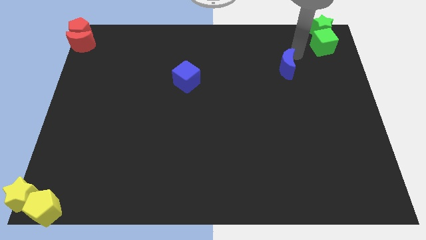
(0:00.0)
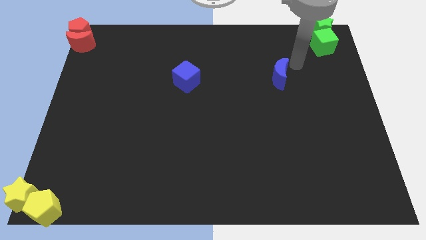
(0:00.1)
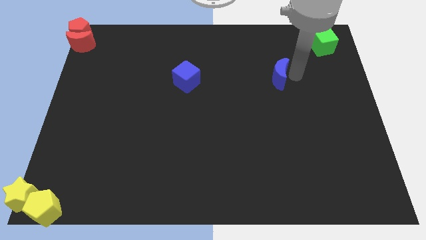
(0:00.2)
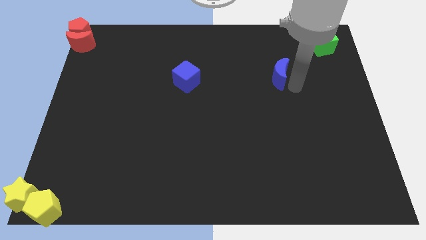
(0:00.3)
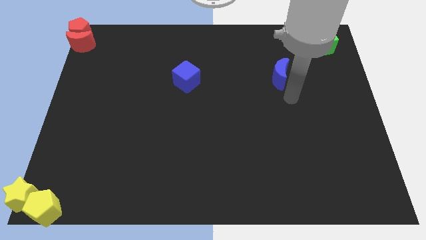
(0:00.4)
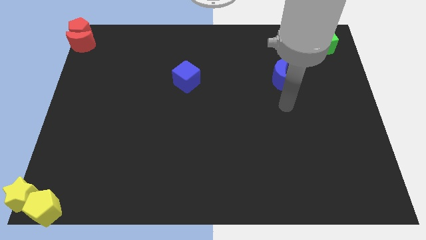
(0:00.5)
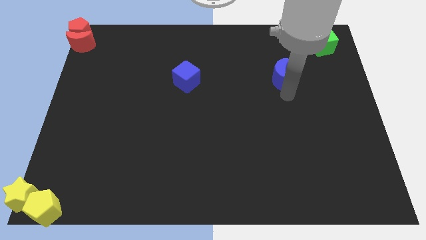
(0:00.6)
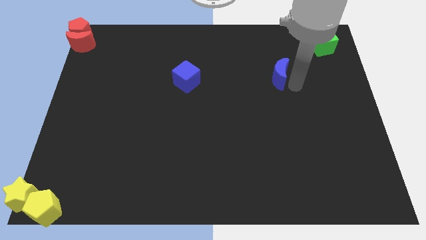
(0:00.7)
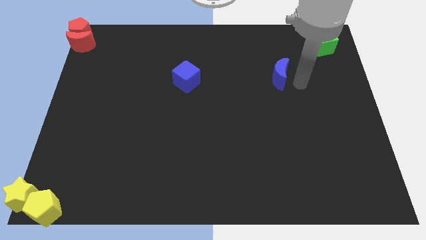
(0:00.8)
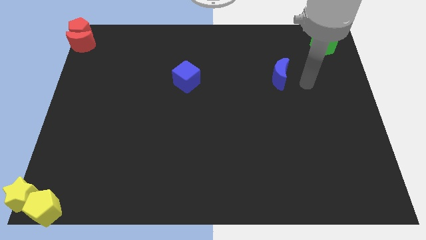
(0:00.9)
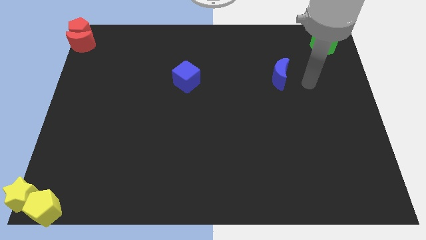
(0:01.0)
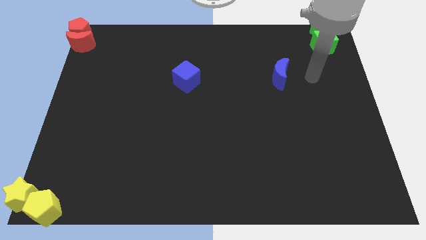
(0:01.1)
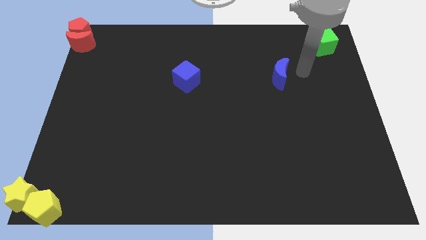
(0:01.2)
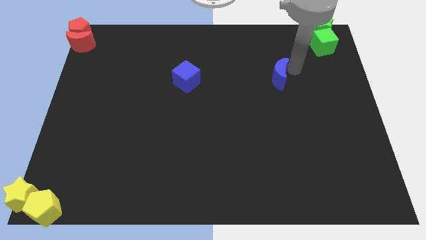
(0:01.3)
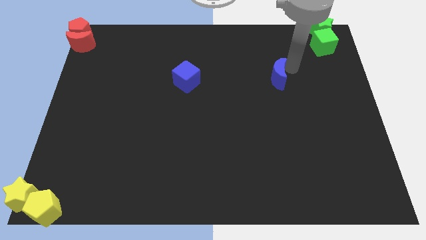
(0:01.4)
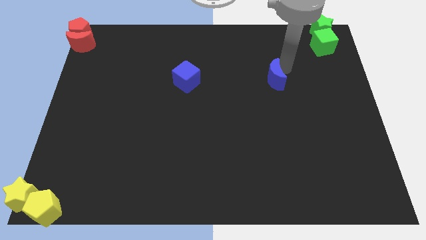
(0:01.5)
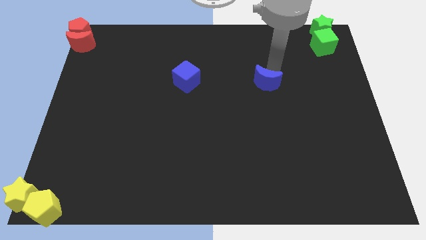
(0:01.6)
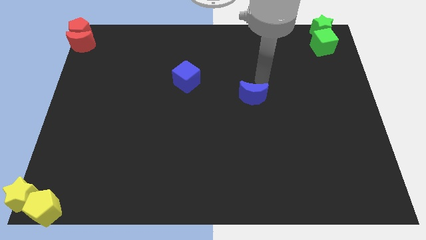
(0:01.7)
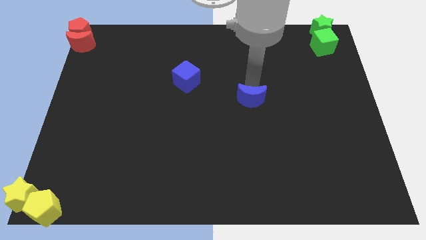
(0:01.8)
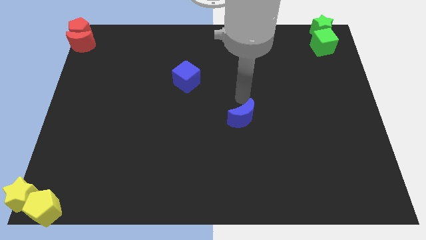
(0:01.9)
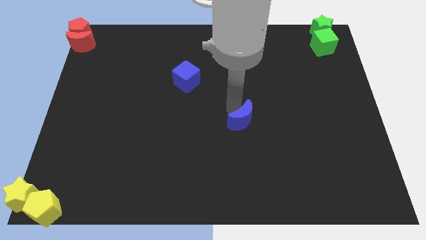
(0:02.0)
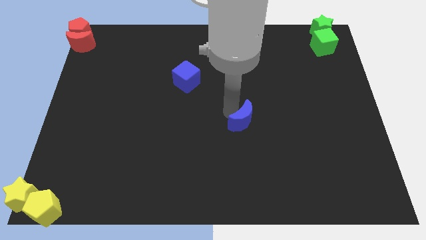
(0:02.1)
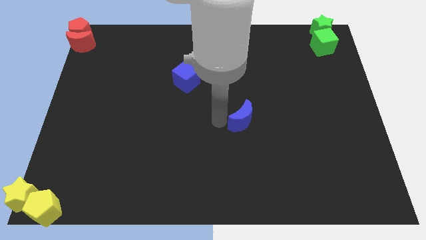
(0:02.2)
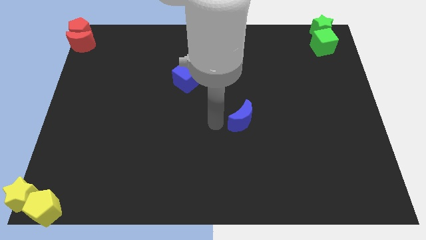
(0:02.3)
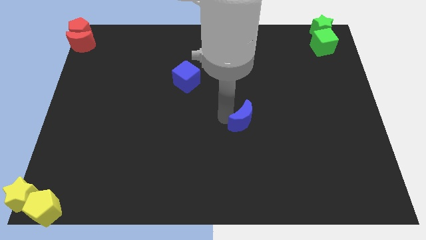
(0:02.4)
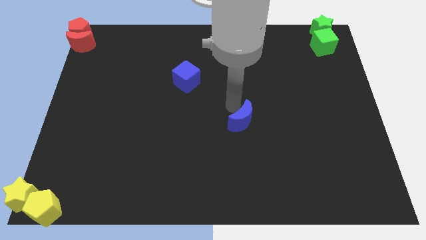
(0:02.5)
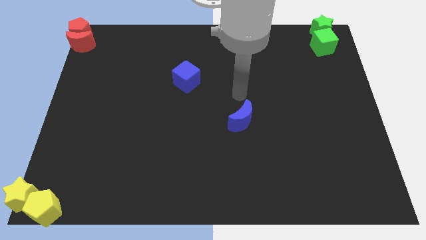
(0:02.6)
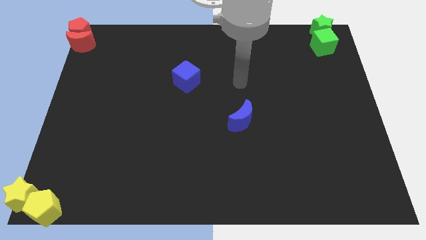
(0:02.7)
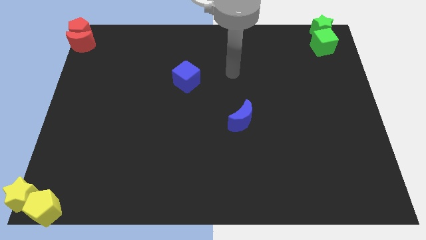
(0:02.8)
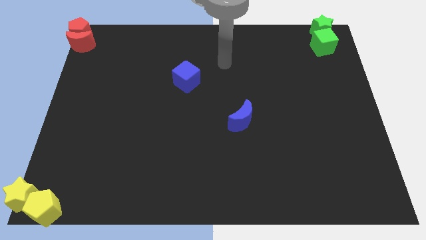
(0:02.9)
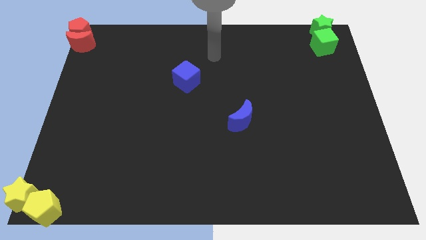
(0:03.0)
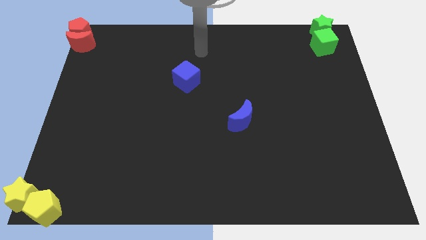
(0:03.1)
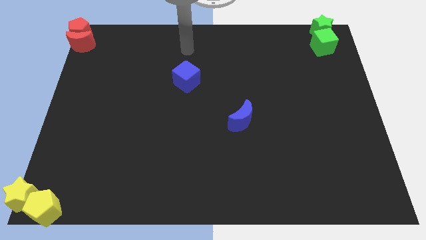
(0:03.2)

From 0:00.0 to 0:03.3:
move the blue crescent to the center of the board

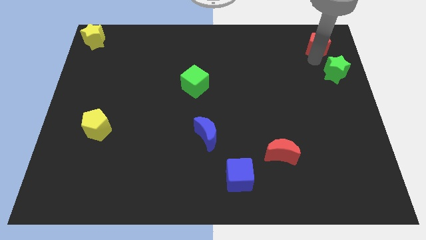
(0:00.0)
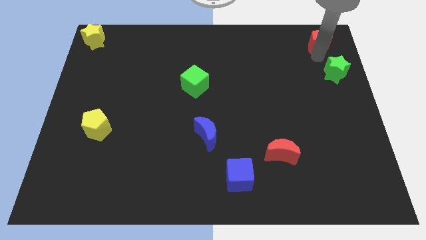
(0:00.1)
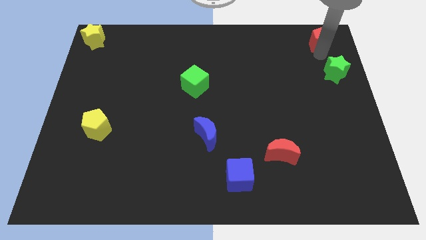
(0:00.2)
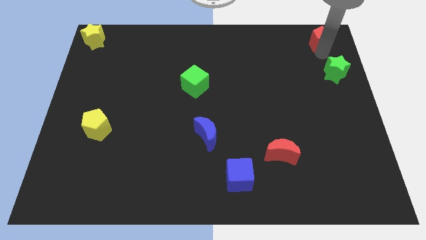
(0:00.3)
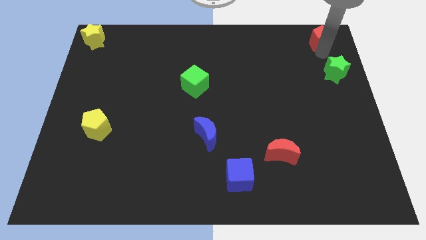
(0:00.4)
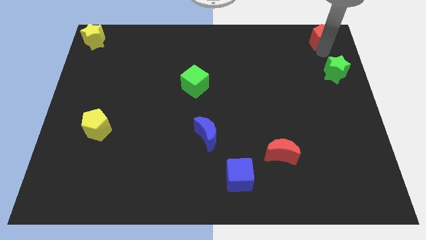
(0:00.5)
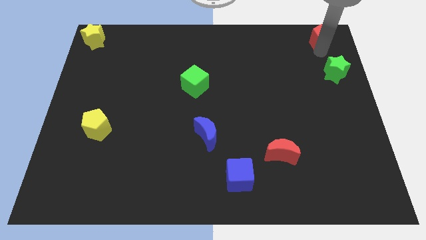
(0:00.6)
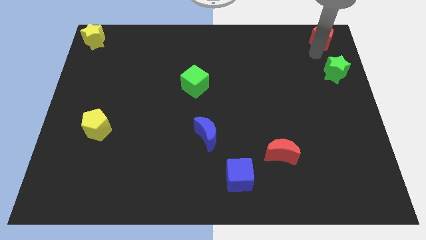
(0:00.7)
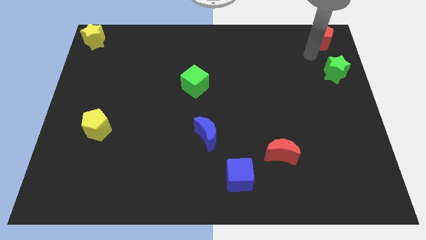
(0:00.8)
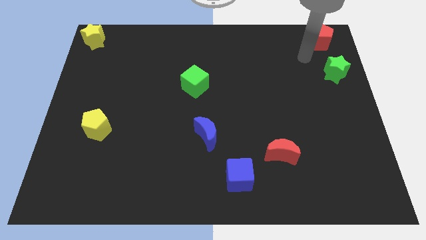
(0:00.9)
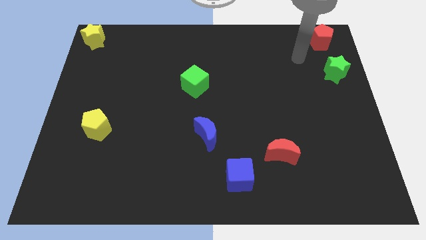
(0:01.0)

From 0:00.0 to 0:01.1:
push the red pentagon slightly to the top right corner

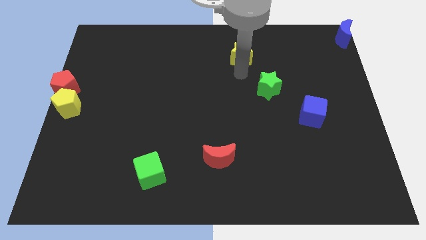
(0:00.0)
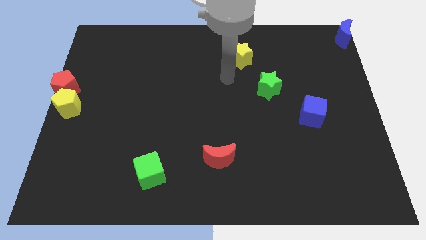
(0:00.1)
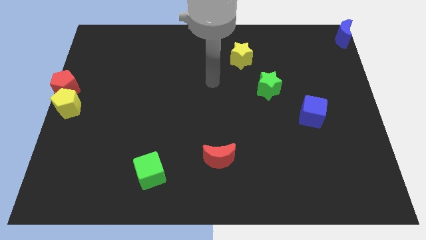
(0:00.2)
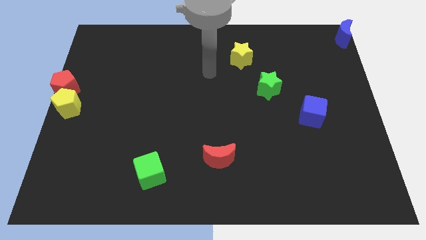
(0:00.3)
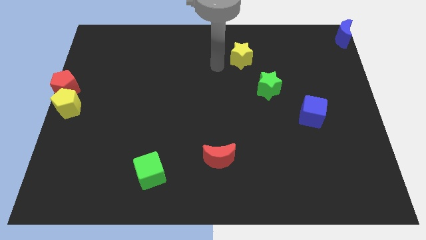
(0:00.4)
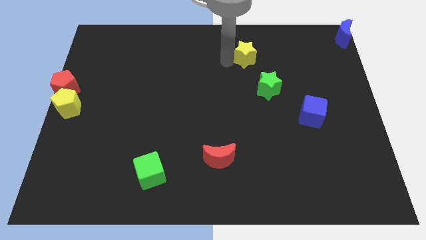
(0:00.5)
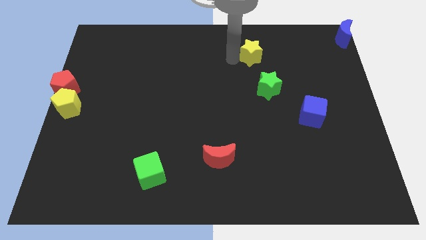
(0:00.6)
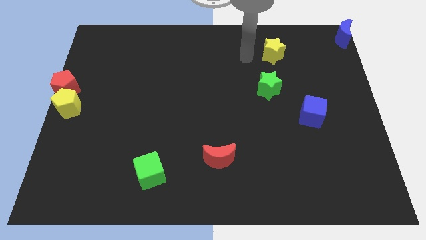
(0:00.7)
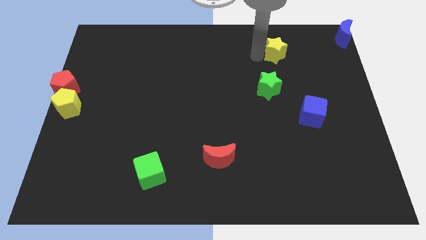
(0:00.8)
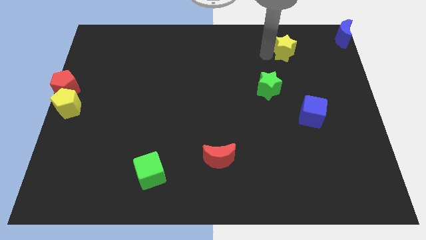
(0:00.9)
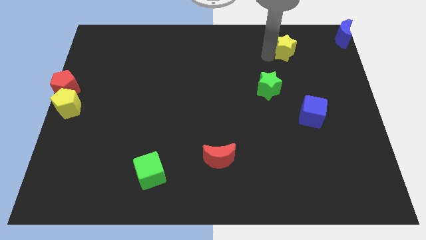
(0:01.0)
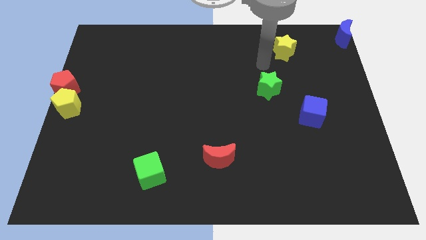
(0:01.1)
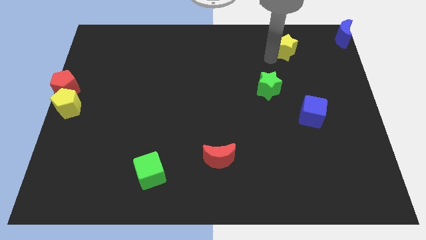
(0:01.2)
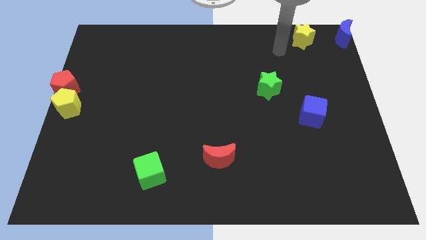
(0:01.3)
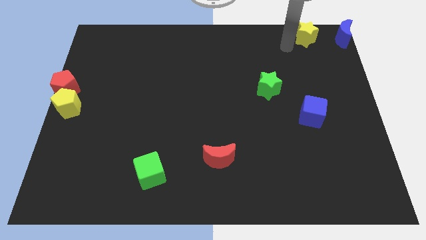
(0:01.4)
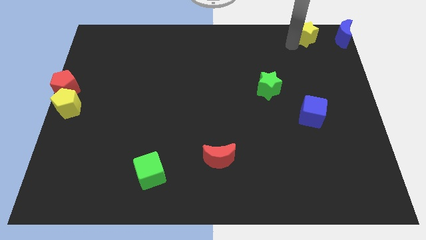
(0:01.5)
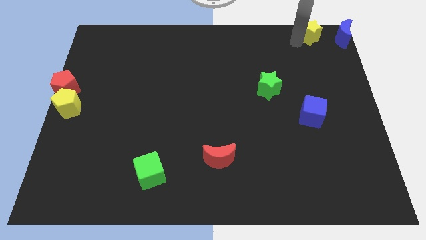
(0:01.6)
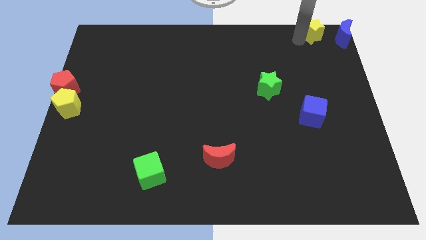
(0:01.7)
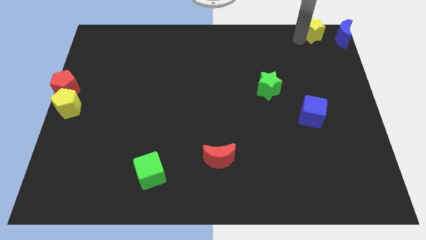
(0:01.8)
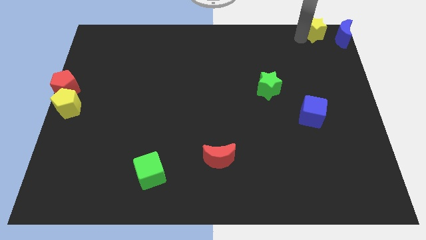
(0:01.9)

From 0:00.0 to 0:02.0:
move yellow star to the left of blue moon

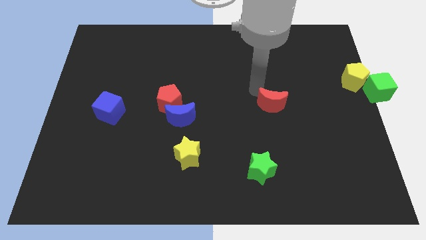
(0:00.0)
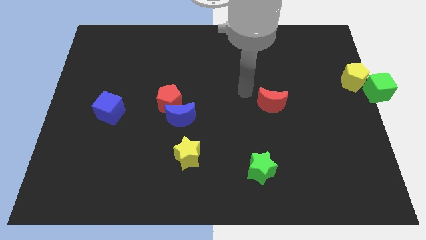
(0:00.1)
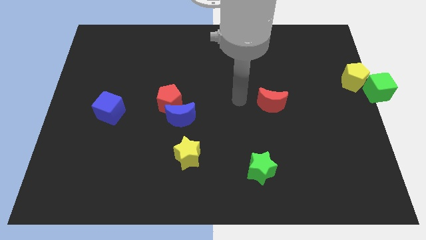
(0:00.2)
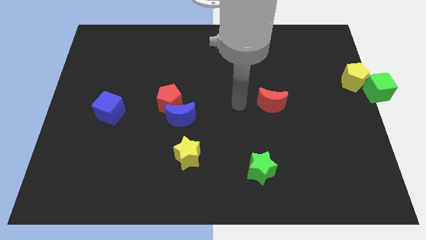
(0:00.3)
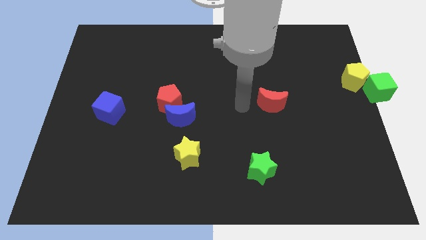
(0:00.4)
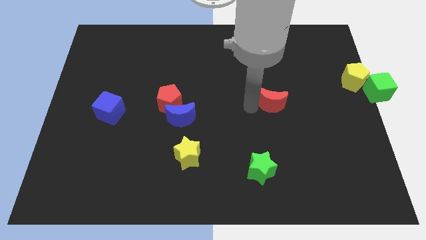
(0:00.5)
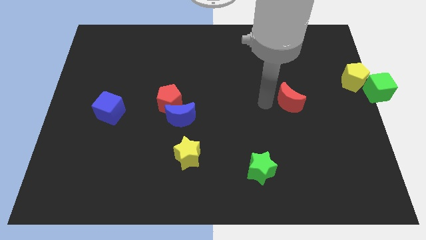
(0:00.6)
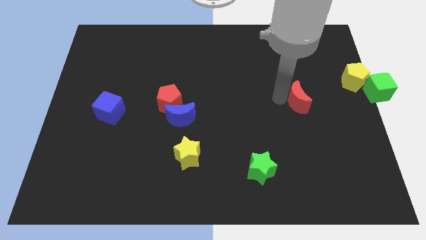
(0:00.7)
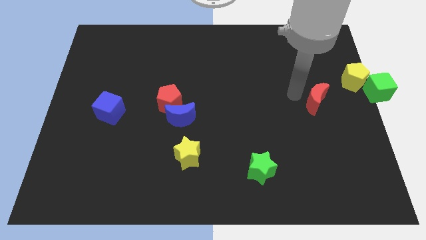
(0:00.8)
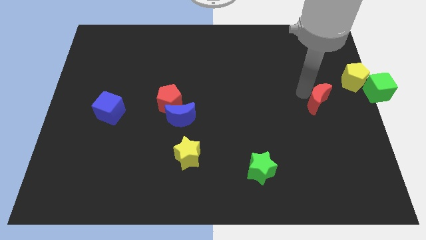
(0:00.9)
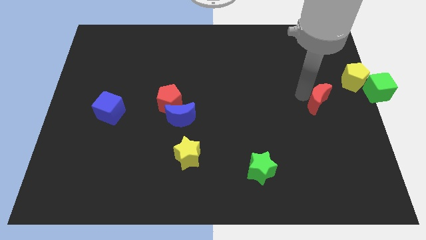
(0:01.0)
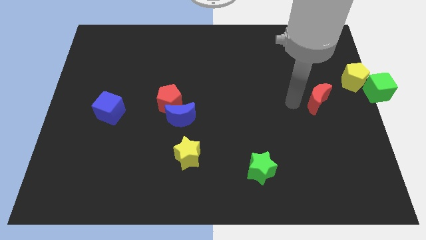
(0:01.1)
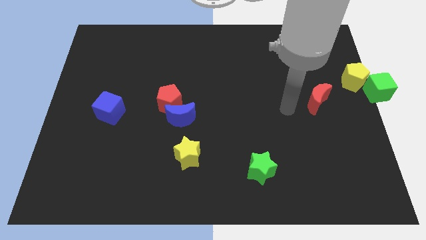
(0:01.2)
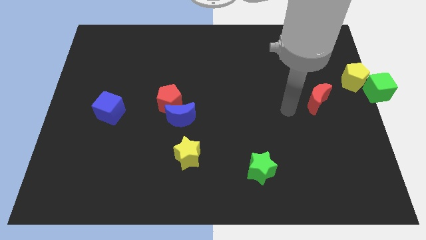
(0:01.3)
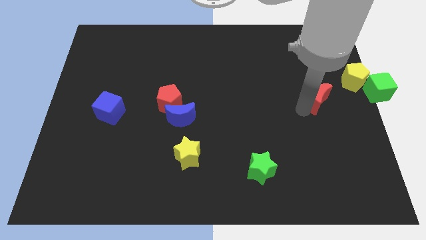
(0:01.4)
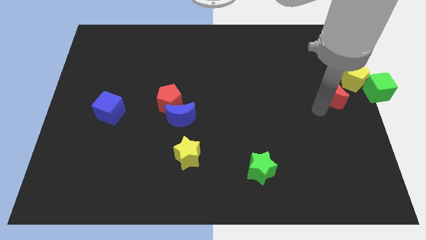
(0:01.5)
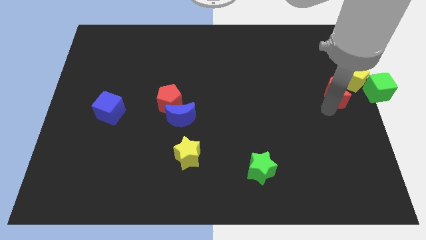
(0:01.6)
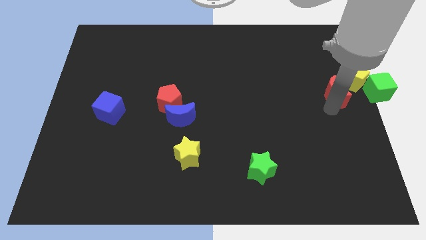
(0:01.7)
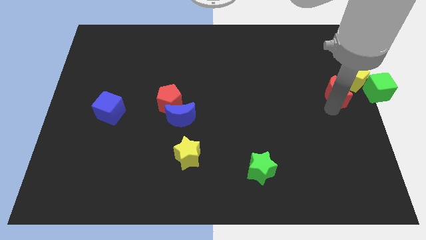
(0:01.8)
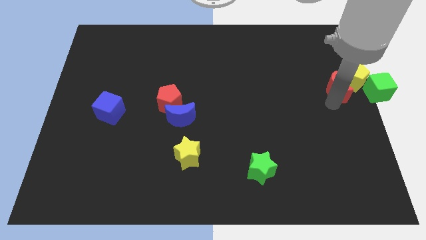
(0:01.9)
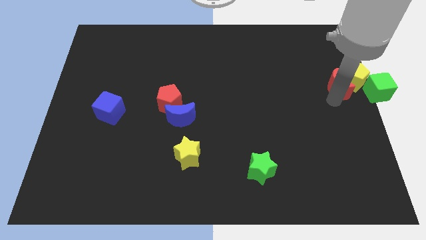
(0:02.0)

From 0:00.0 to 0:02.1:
slide red moon close to the yellow pentagon

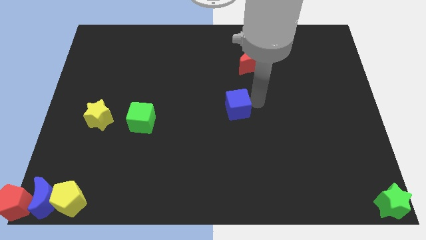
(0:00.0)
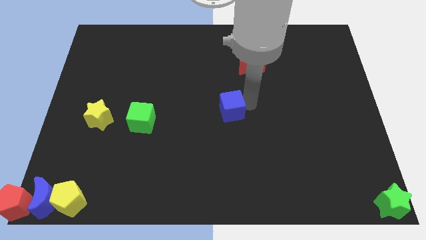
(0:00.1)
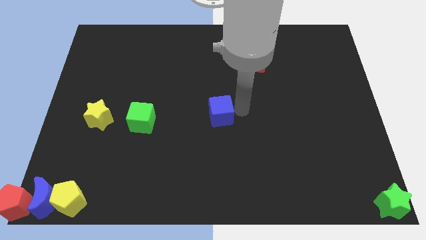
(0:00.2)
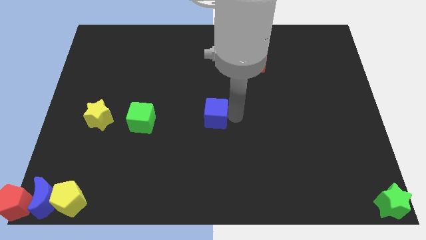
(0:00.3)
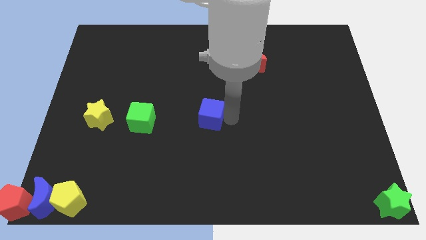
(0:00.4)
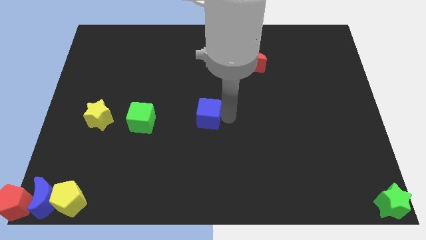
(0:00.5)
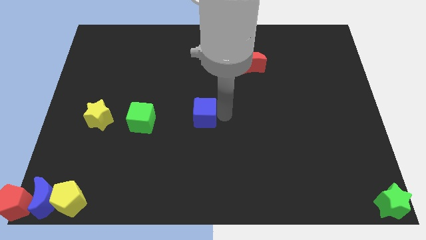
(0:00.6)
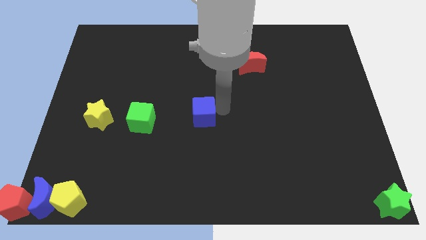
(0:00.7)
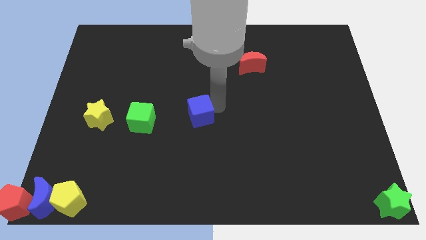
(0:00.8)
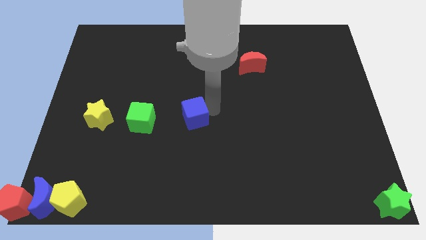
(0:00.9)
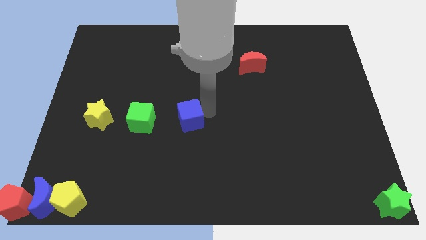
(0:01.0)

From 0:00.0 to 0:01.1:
place blue cube beside green star
